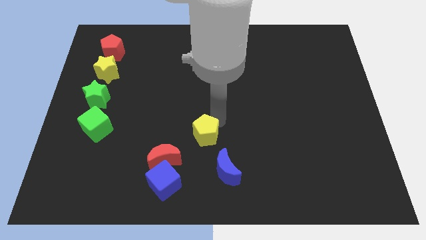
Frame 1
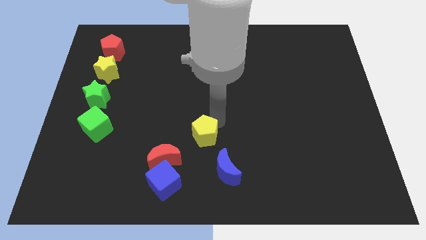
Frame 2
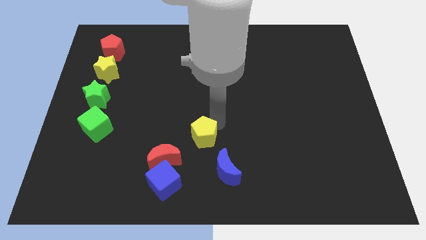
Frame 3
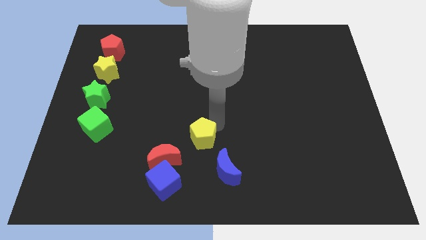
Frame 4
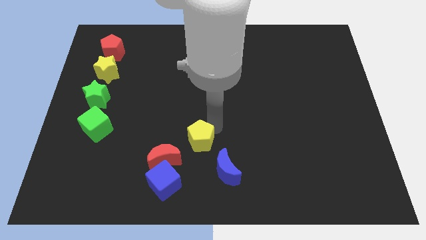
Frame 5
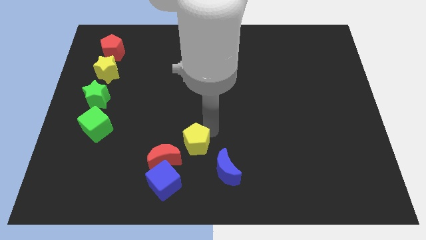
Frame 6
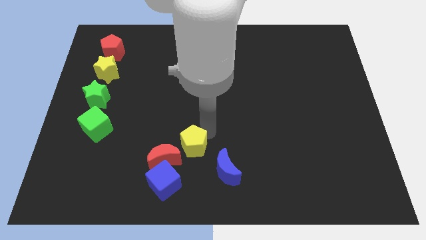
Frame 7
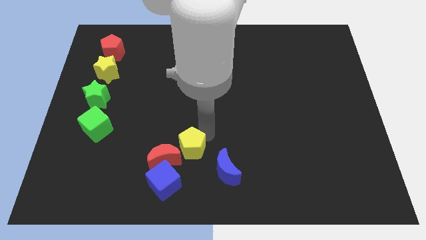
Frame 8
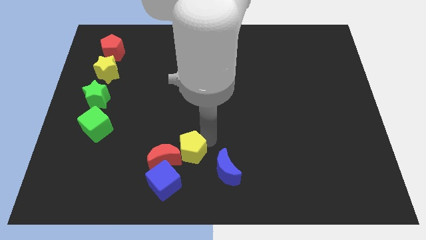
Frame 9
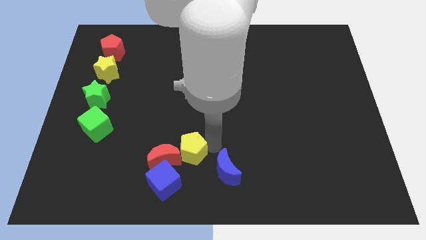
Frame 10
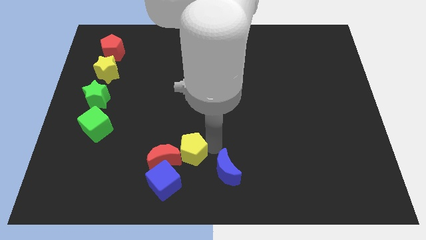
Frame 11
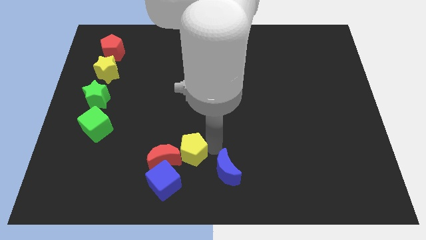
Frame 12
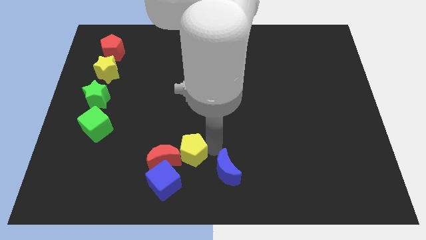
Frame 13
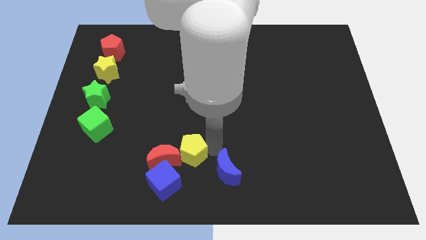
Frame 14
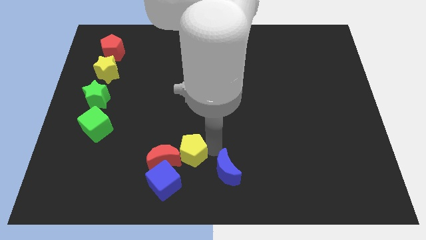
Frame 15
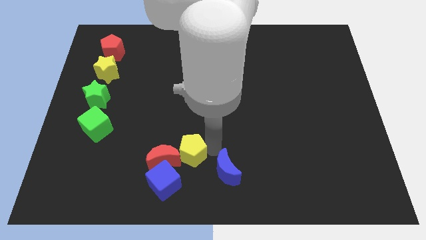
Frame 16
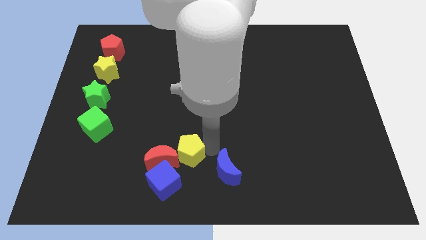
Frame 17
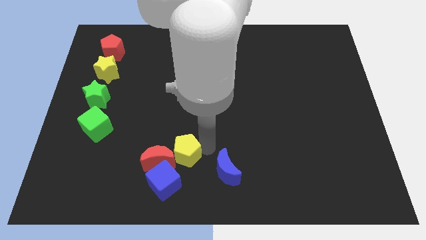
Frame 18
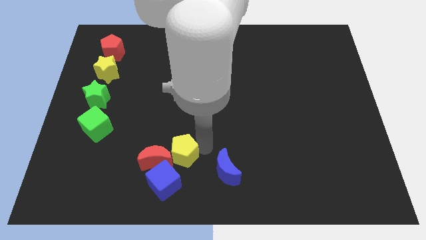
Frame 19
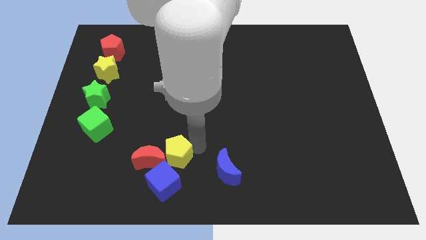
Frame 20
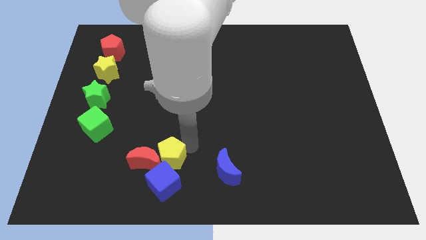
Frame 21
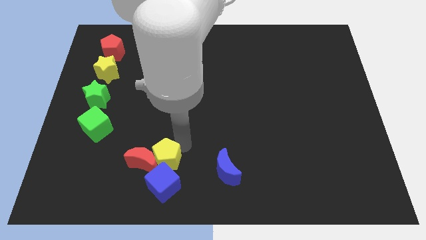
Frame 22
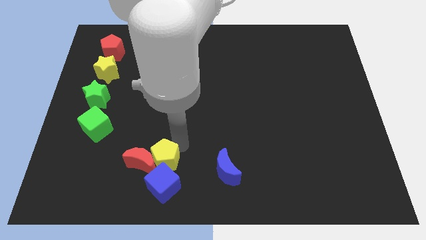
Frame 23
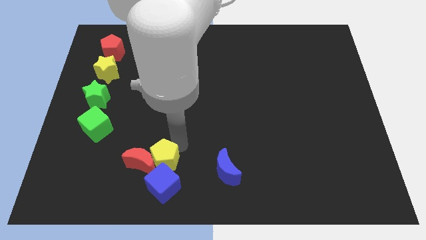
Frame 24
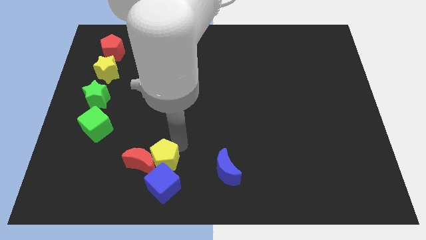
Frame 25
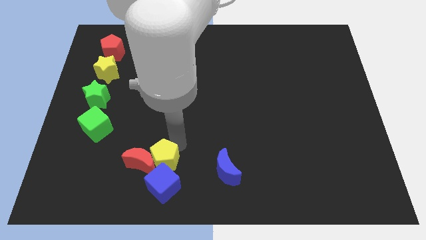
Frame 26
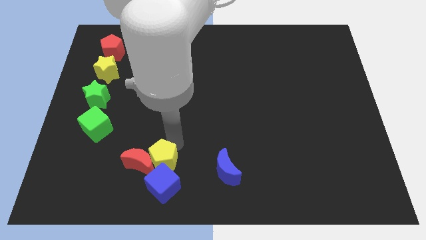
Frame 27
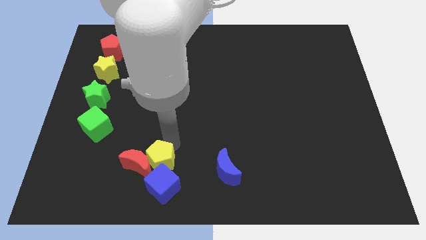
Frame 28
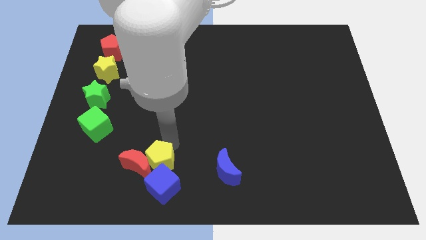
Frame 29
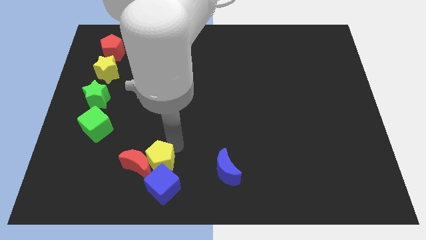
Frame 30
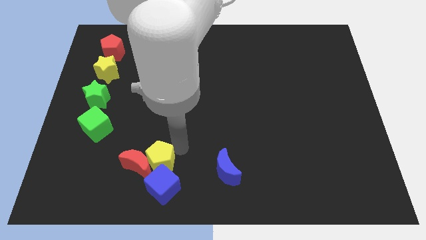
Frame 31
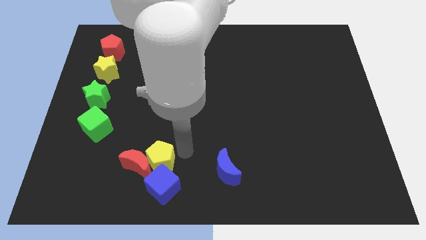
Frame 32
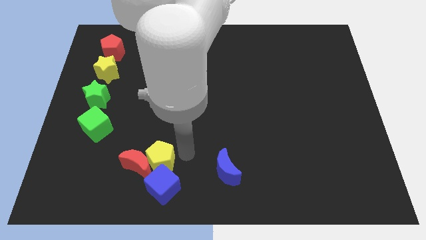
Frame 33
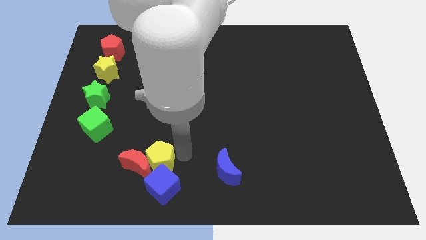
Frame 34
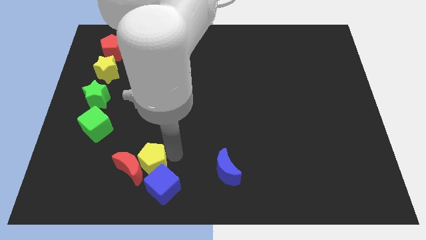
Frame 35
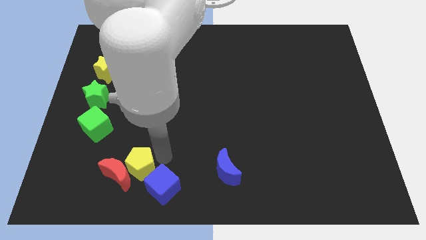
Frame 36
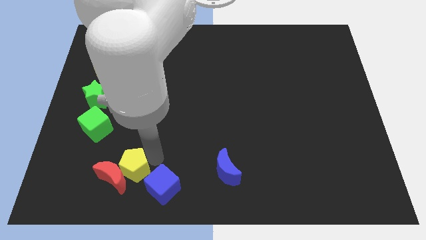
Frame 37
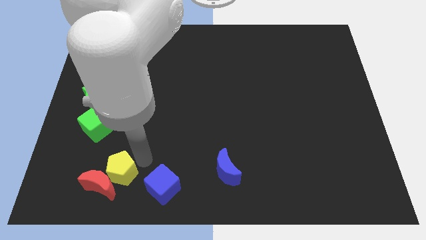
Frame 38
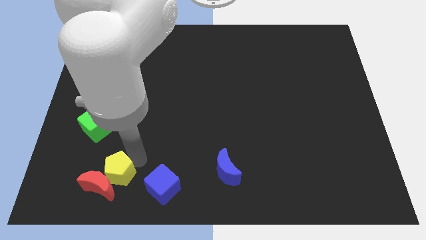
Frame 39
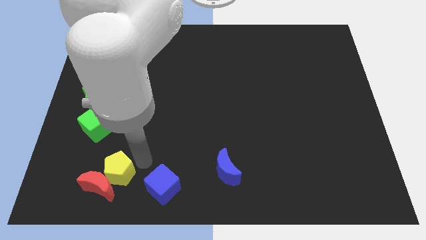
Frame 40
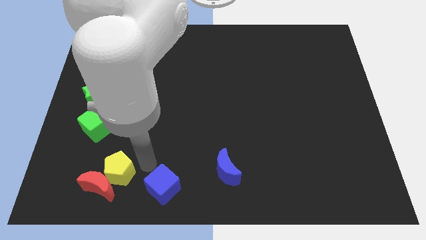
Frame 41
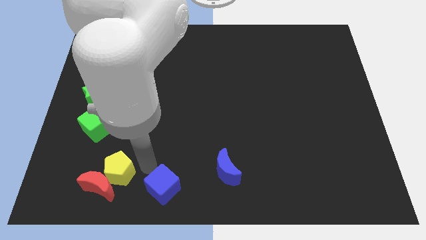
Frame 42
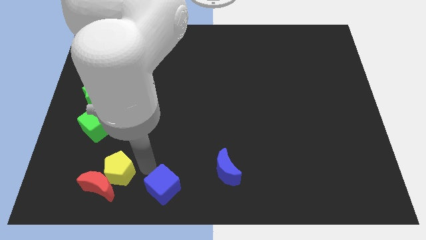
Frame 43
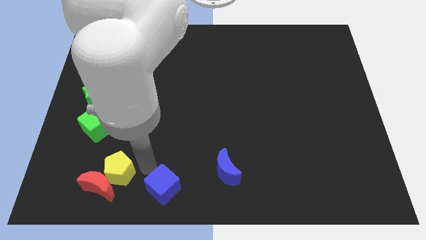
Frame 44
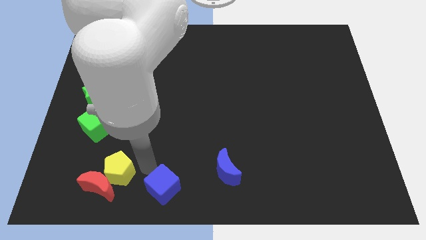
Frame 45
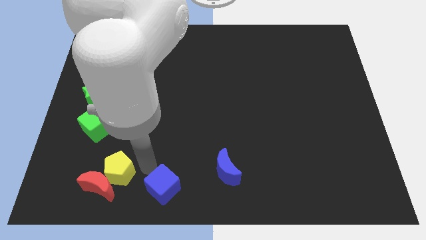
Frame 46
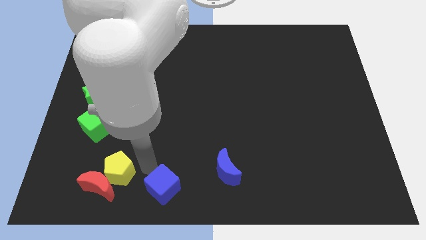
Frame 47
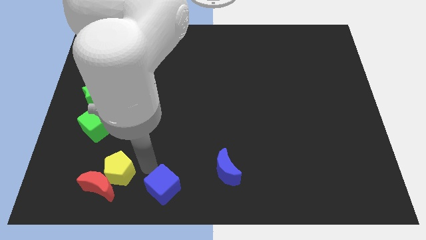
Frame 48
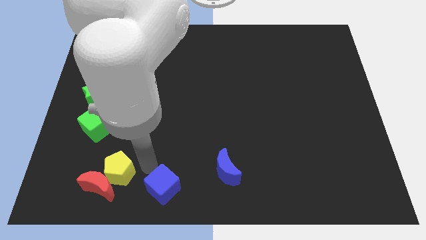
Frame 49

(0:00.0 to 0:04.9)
push the yellow pentagon into the red moon

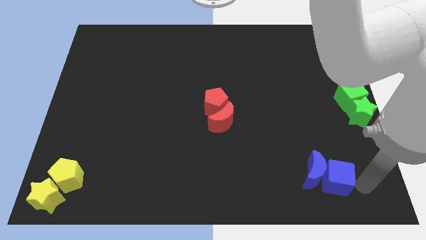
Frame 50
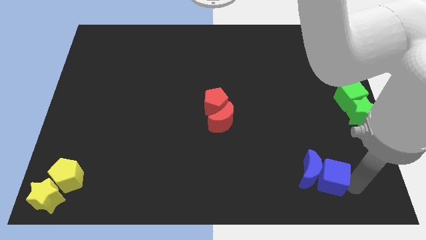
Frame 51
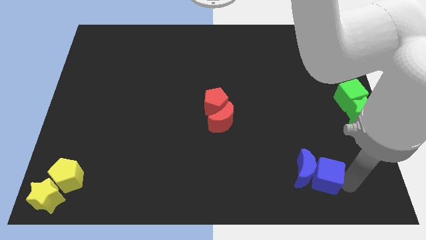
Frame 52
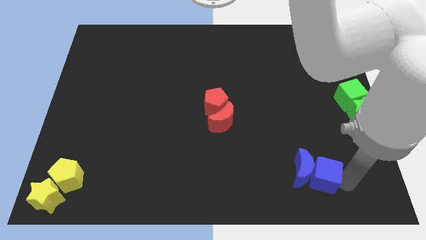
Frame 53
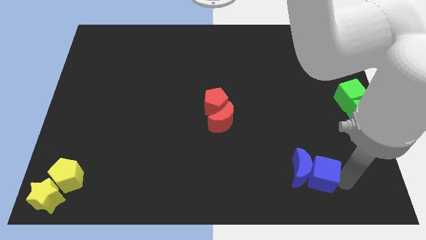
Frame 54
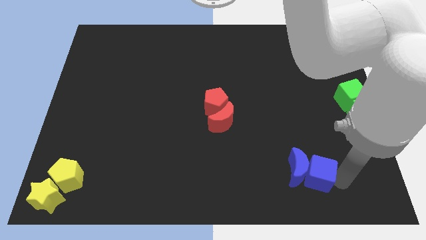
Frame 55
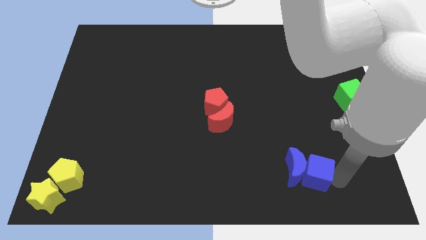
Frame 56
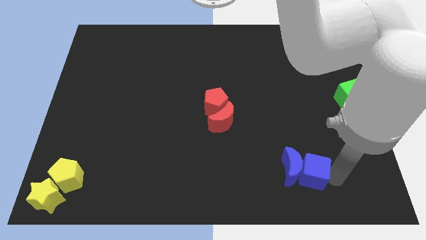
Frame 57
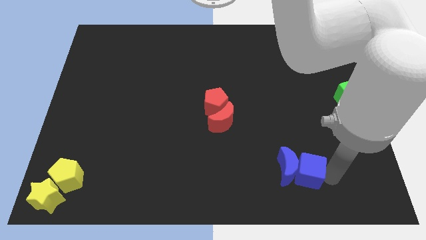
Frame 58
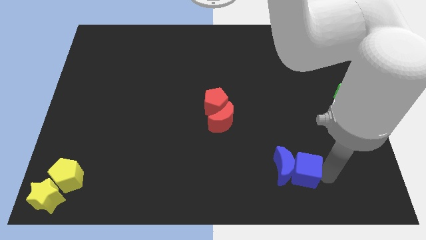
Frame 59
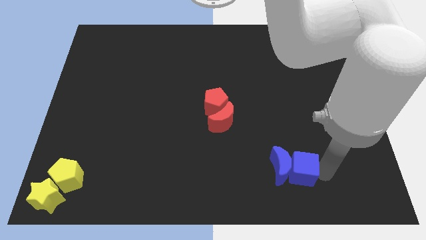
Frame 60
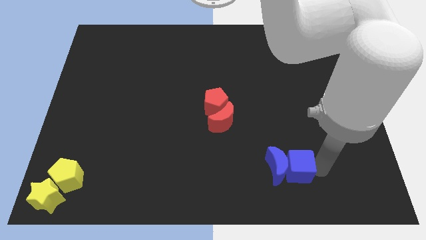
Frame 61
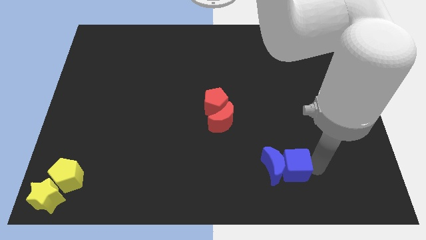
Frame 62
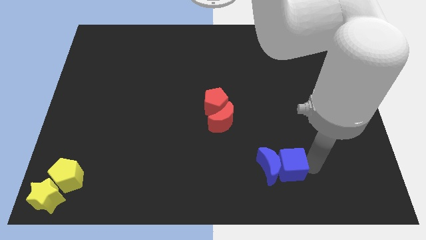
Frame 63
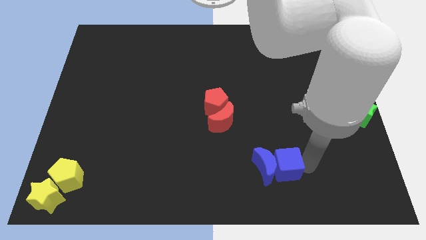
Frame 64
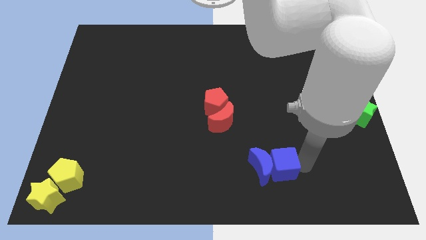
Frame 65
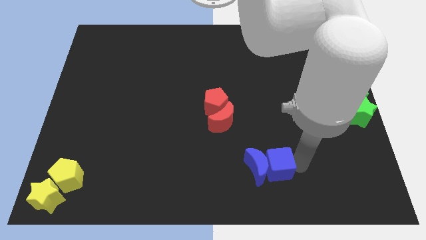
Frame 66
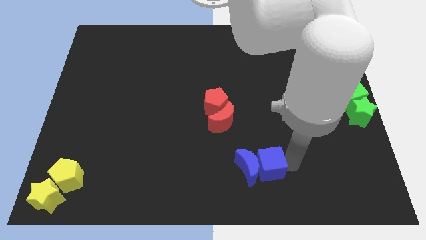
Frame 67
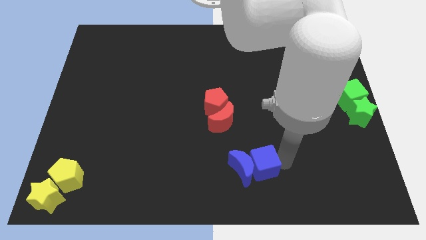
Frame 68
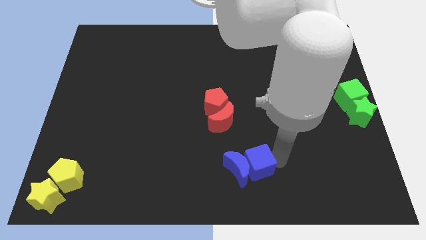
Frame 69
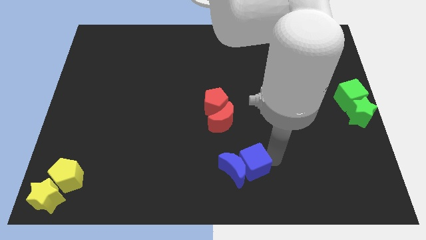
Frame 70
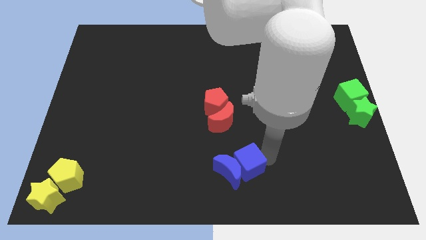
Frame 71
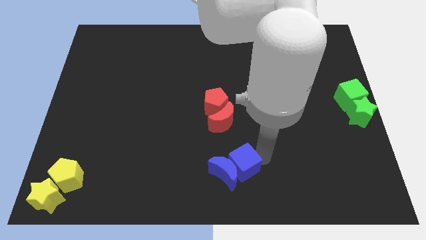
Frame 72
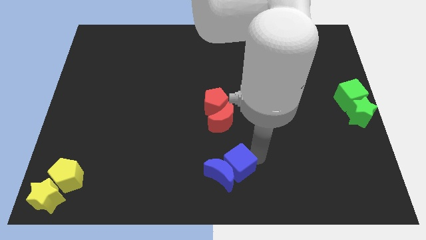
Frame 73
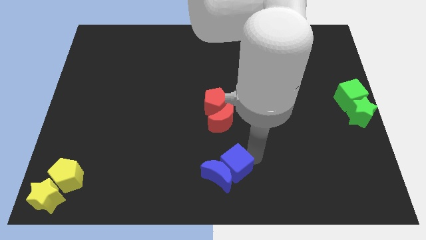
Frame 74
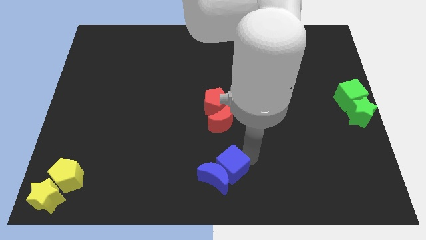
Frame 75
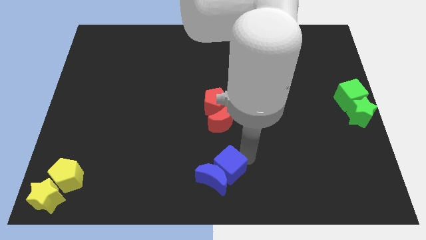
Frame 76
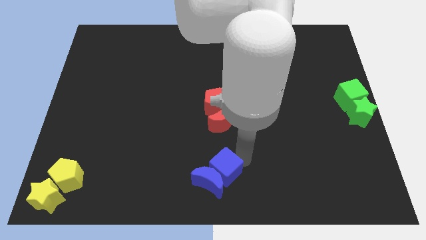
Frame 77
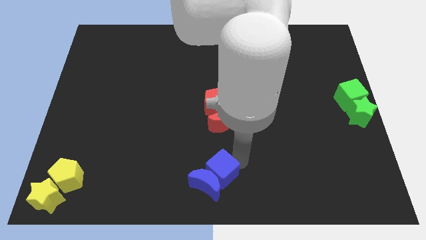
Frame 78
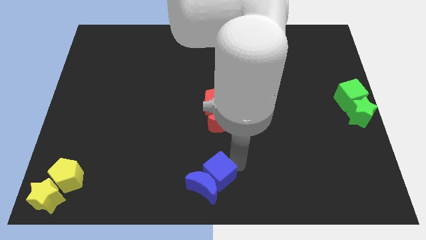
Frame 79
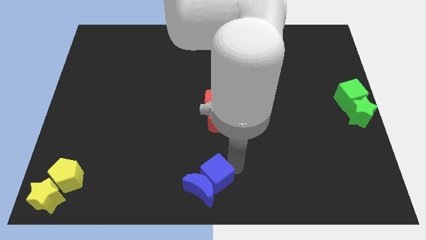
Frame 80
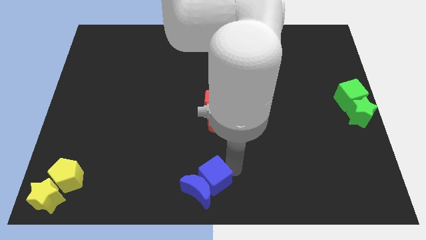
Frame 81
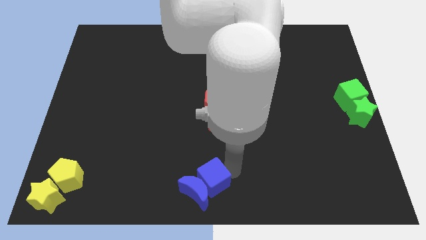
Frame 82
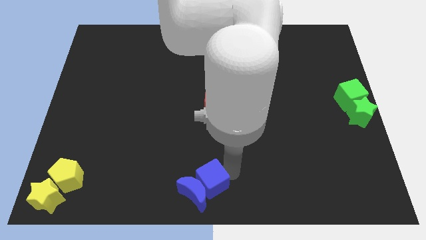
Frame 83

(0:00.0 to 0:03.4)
push the blue cube along with the blue crescent to the bottom center of the board

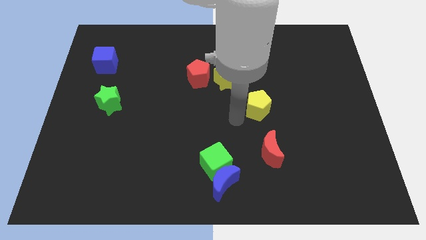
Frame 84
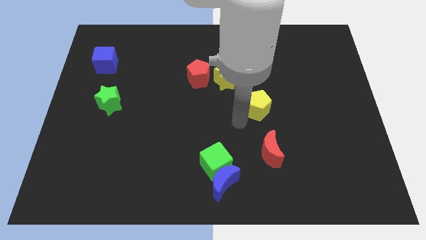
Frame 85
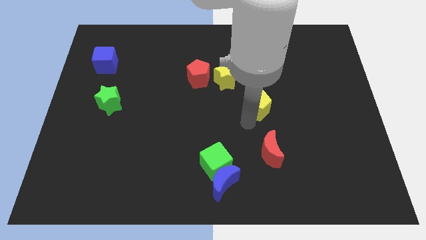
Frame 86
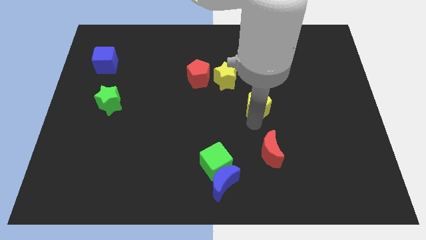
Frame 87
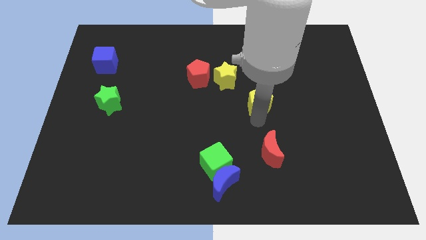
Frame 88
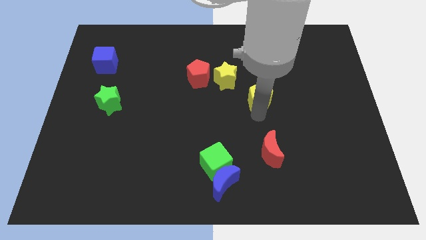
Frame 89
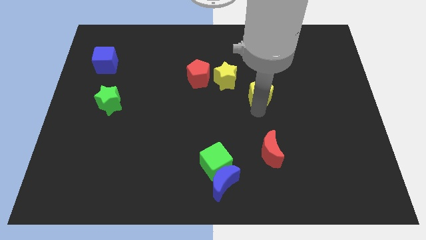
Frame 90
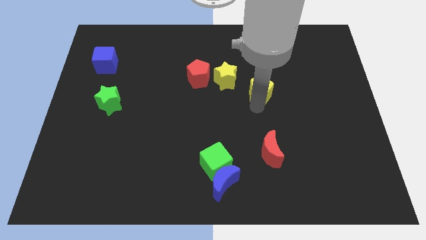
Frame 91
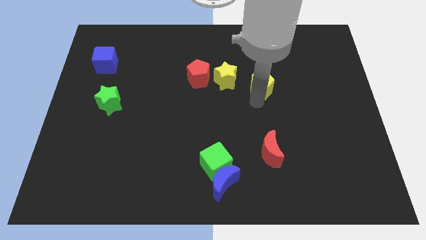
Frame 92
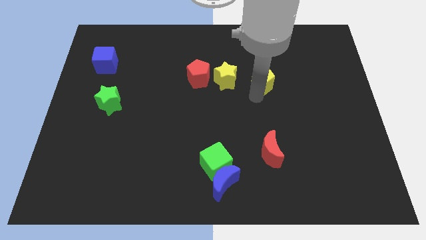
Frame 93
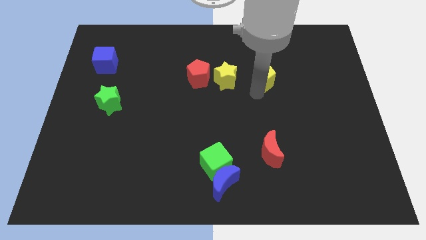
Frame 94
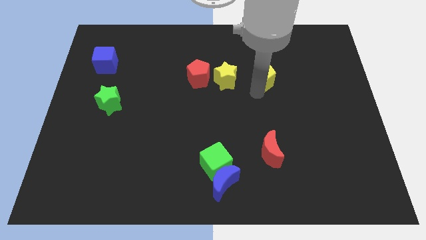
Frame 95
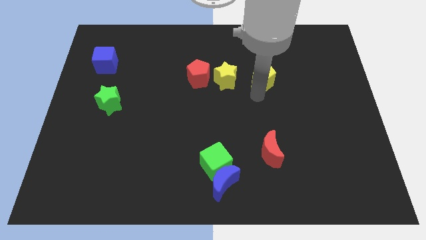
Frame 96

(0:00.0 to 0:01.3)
place the yellow pentagon right to the yellow star
